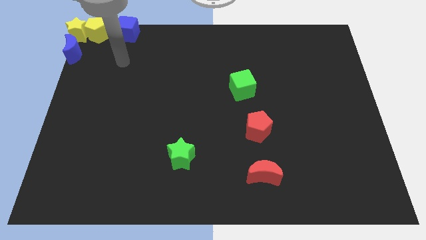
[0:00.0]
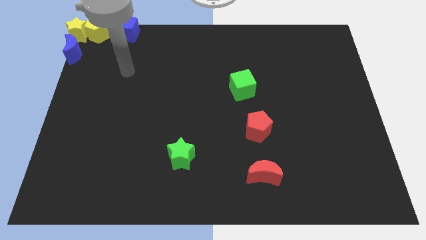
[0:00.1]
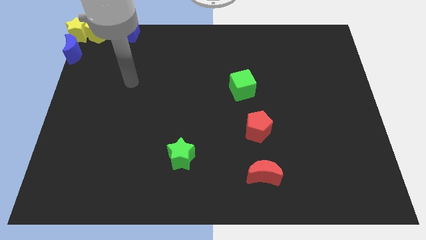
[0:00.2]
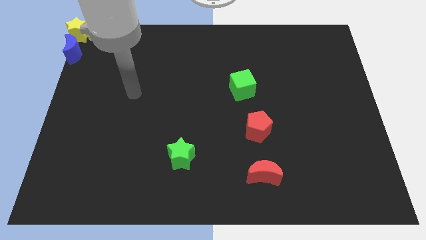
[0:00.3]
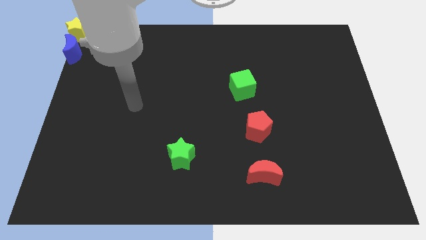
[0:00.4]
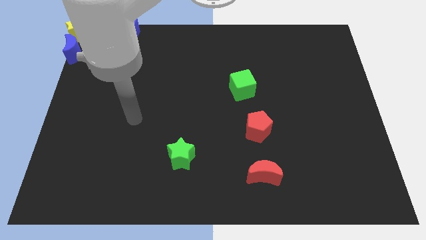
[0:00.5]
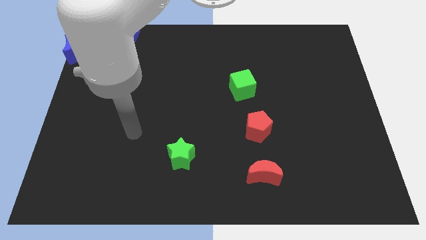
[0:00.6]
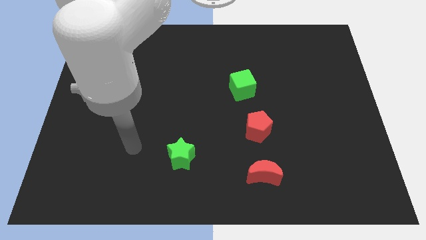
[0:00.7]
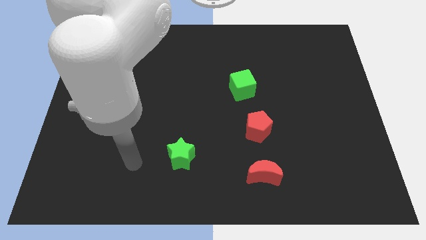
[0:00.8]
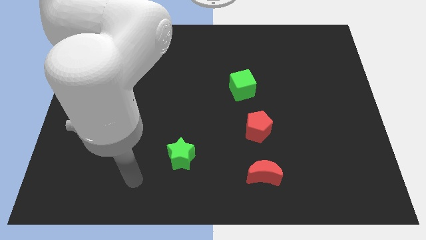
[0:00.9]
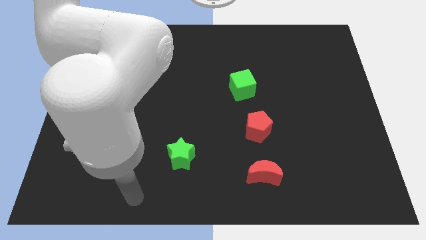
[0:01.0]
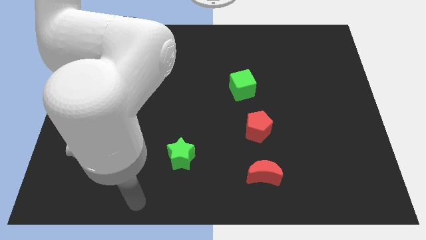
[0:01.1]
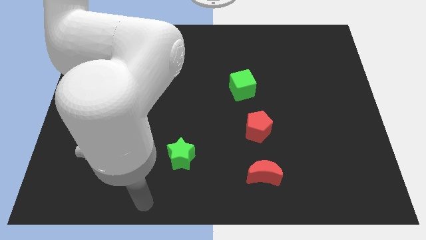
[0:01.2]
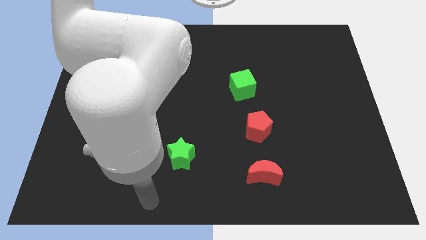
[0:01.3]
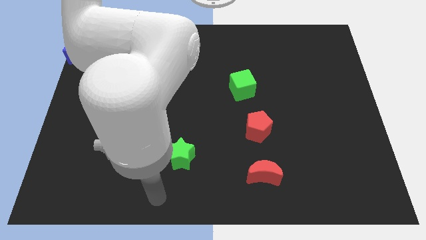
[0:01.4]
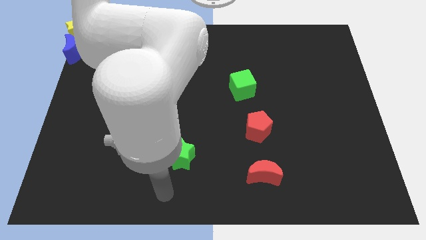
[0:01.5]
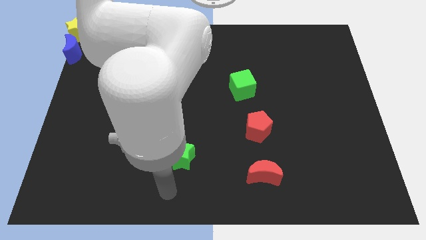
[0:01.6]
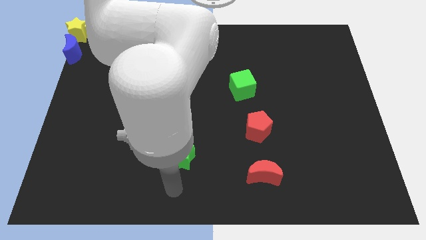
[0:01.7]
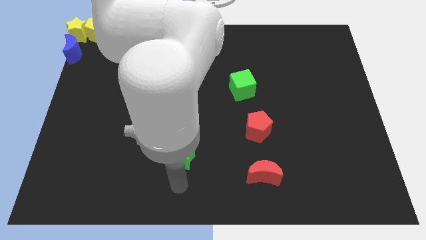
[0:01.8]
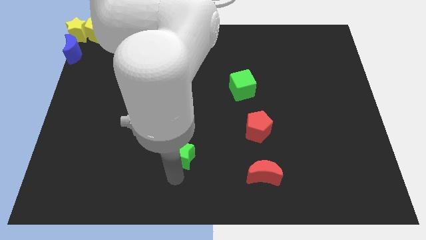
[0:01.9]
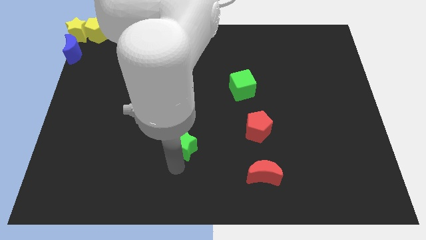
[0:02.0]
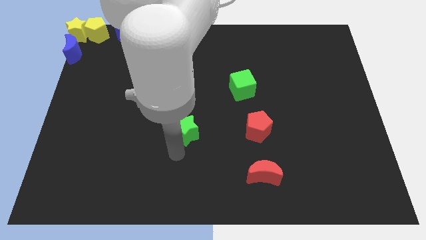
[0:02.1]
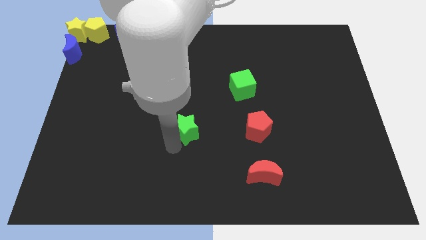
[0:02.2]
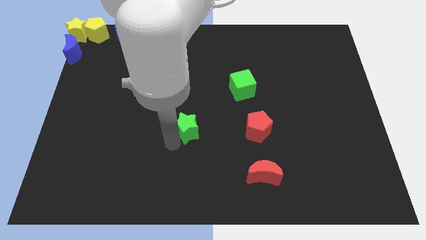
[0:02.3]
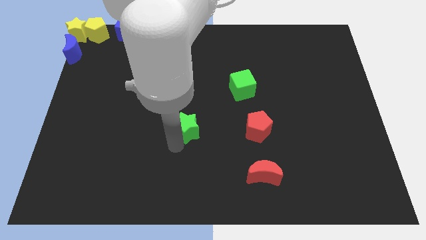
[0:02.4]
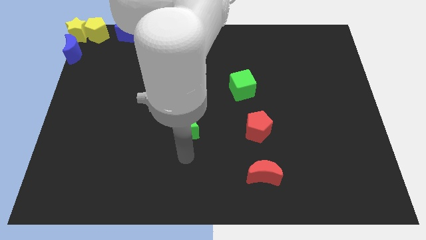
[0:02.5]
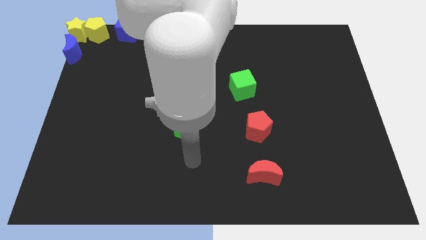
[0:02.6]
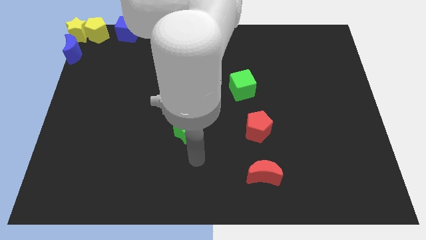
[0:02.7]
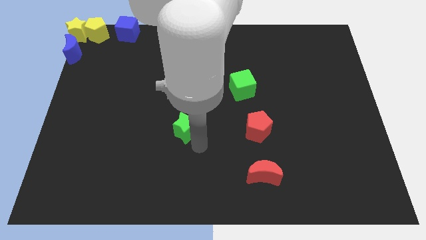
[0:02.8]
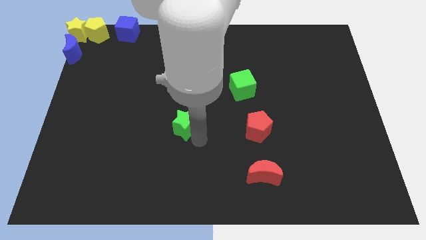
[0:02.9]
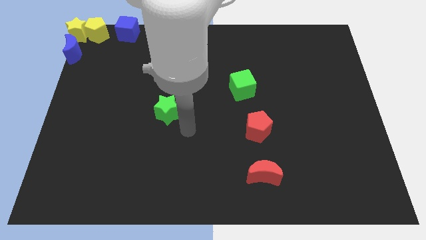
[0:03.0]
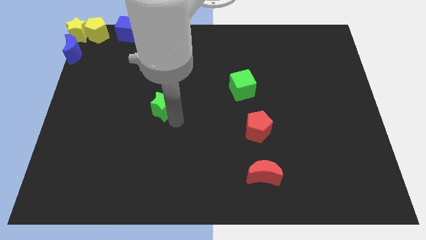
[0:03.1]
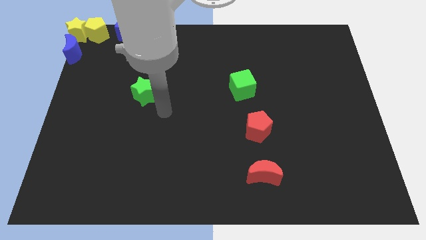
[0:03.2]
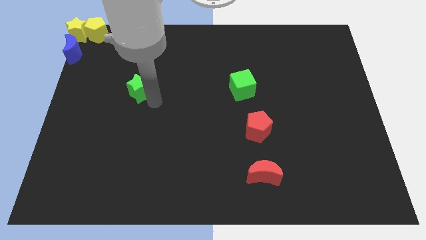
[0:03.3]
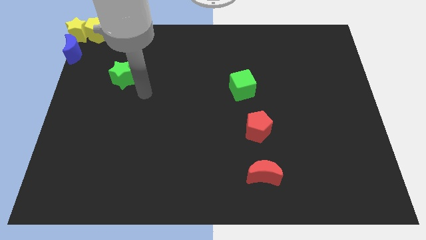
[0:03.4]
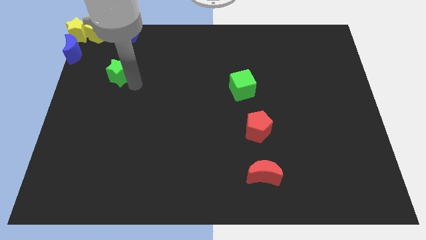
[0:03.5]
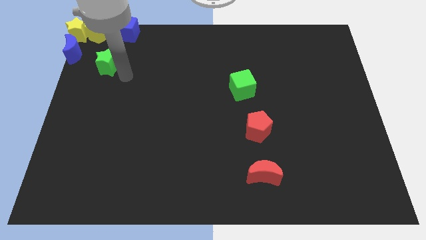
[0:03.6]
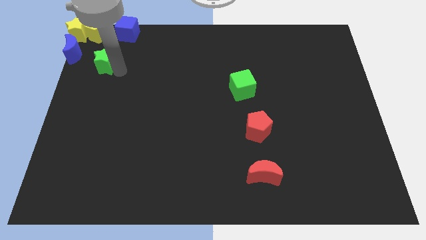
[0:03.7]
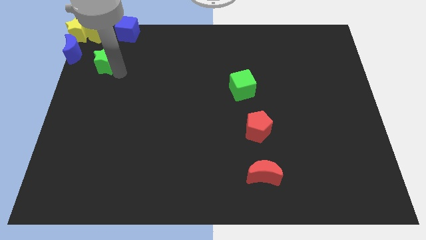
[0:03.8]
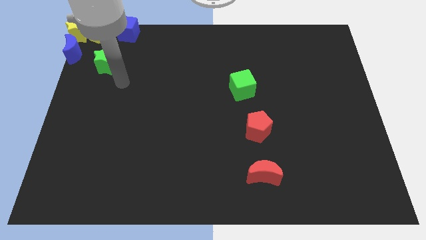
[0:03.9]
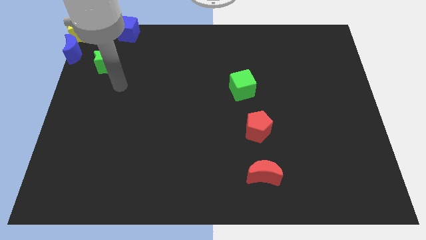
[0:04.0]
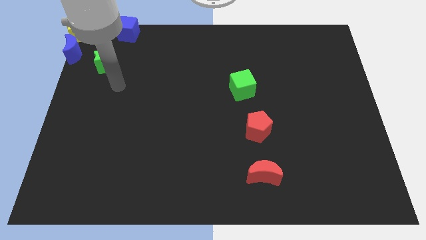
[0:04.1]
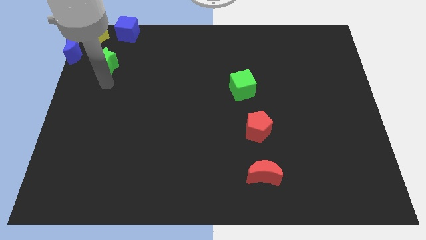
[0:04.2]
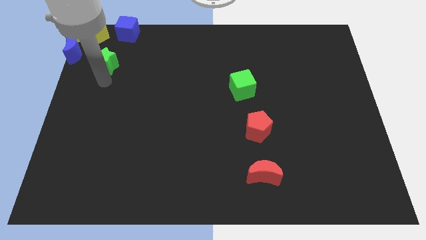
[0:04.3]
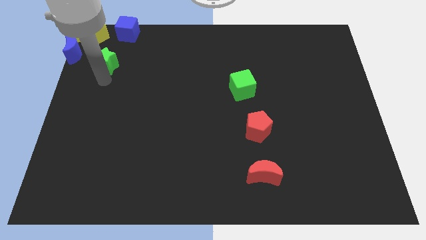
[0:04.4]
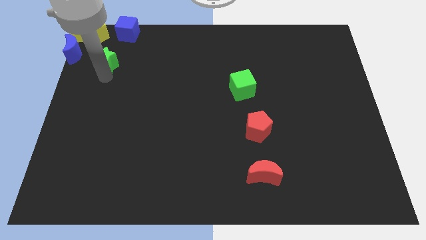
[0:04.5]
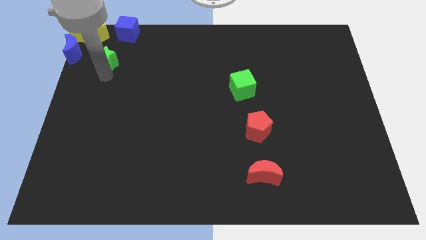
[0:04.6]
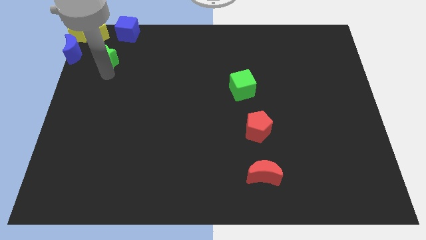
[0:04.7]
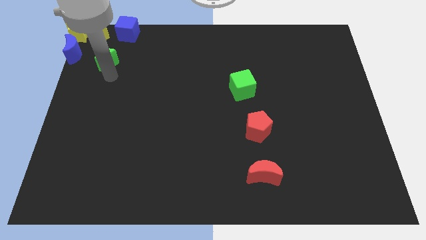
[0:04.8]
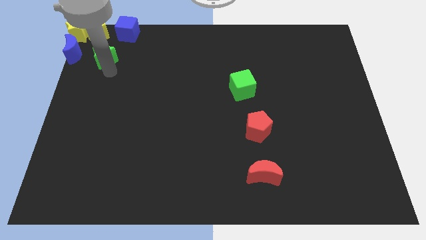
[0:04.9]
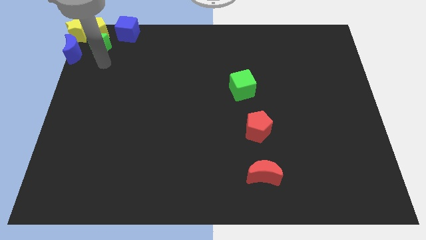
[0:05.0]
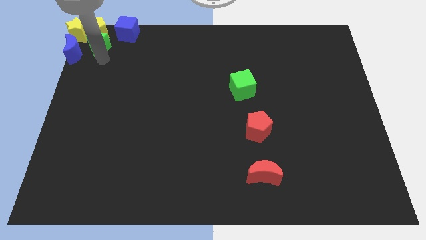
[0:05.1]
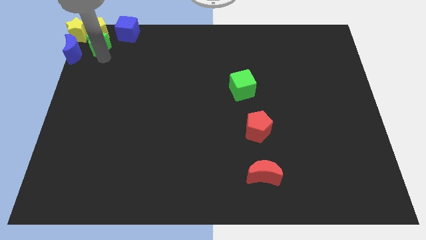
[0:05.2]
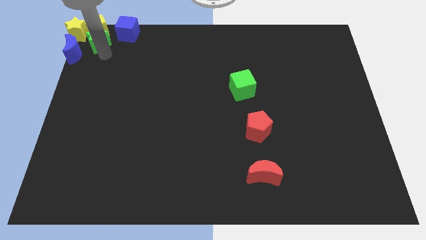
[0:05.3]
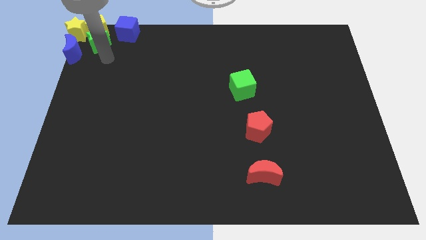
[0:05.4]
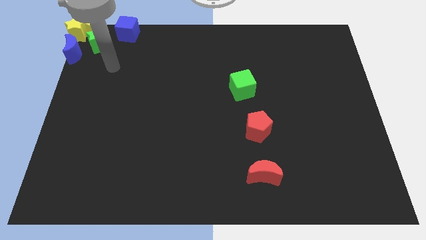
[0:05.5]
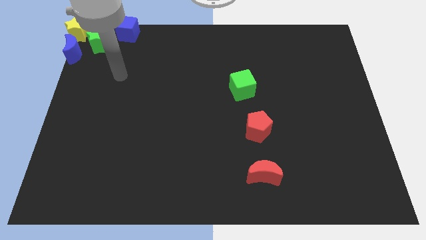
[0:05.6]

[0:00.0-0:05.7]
place the green star at the bottom of the yellow pentagon

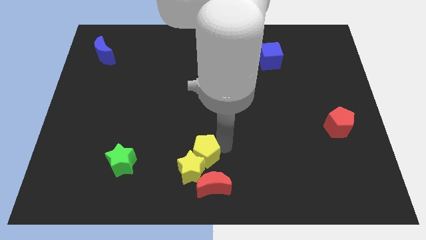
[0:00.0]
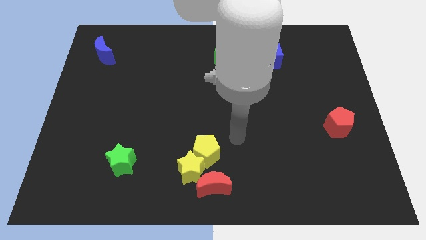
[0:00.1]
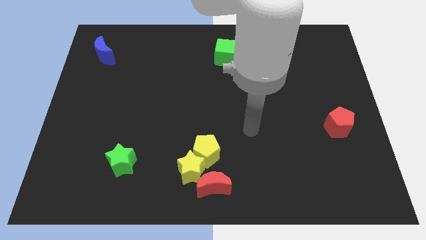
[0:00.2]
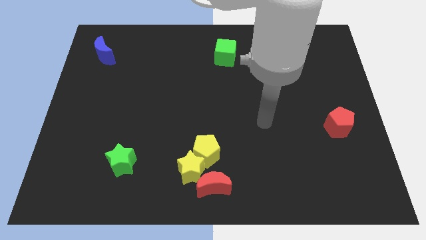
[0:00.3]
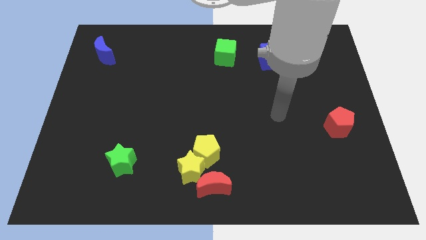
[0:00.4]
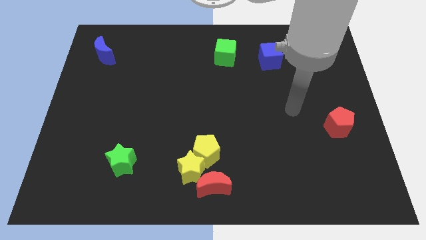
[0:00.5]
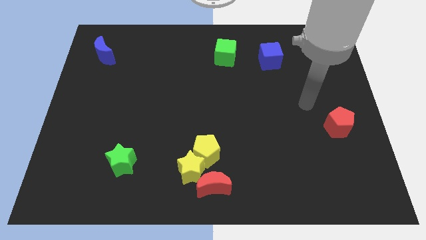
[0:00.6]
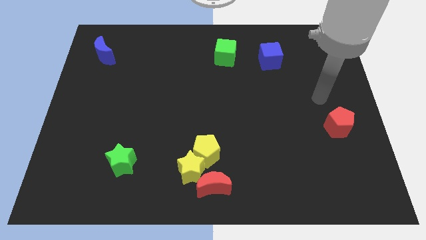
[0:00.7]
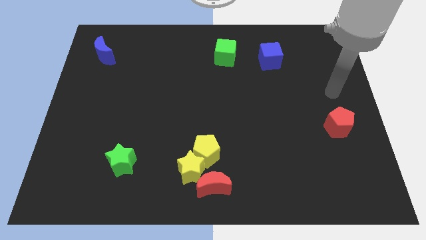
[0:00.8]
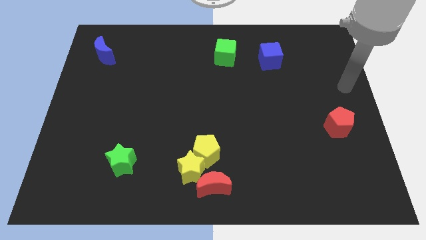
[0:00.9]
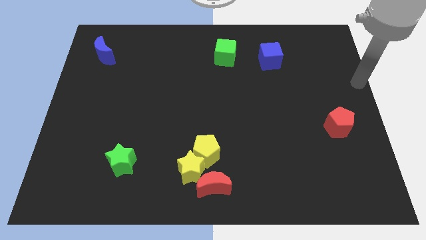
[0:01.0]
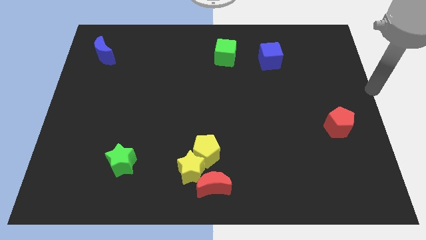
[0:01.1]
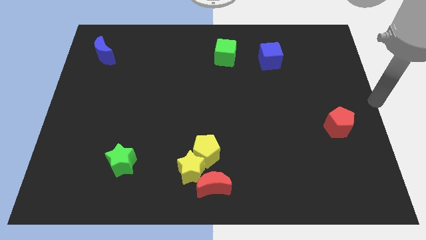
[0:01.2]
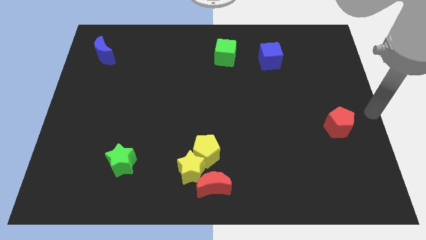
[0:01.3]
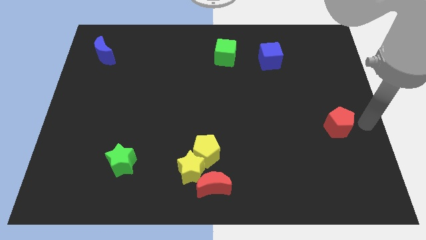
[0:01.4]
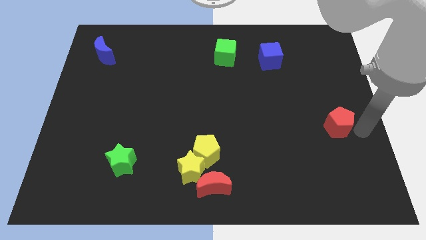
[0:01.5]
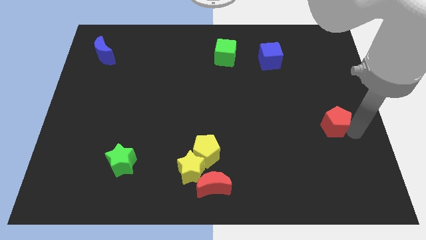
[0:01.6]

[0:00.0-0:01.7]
move your arm towards red pentagon

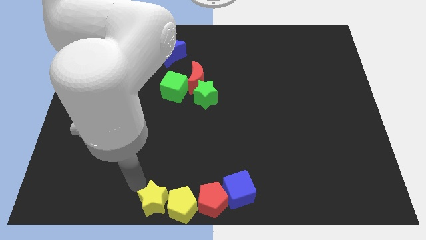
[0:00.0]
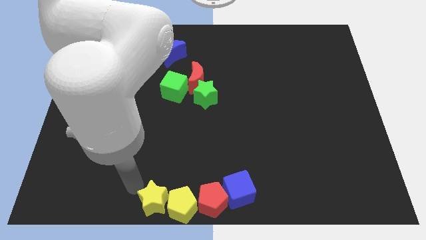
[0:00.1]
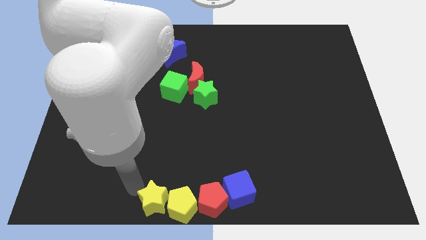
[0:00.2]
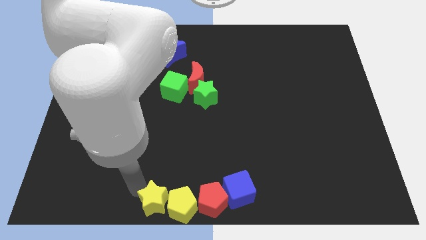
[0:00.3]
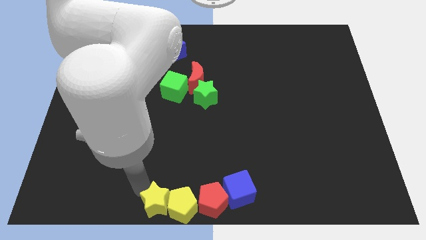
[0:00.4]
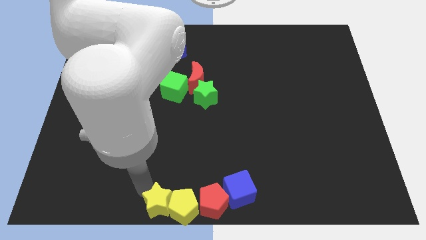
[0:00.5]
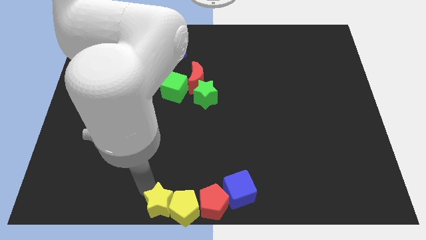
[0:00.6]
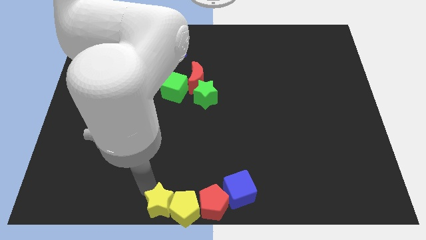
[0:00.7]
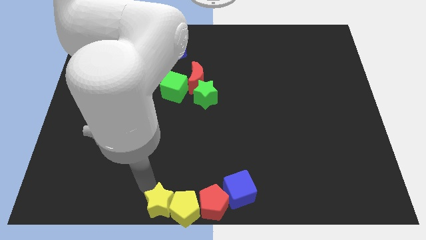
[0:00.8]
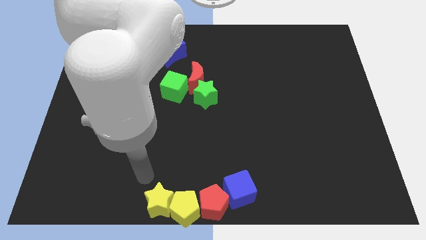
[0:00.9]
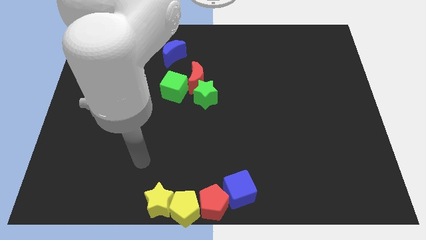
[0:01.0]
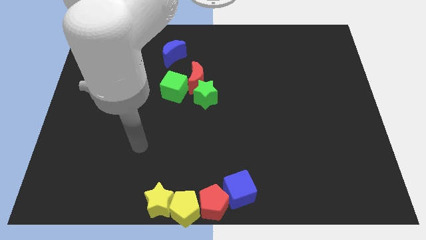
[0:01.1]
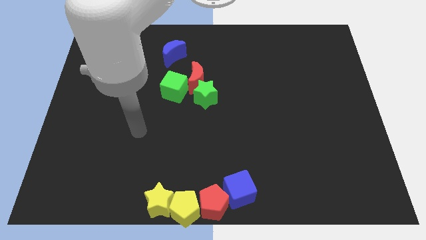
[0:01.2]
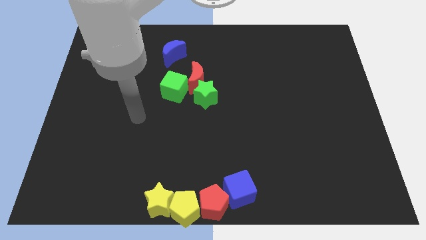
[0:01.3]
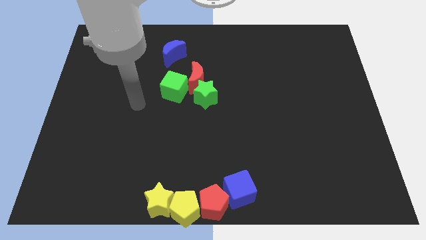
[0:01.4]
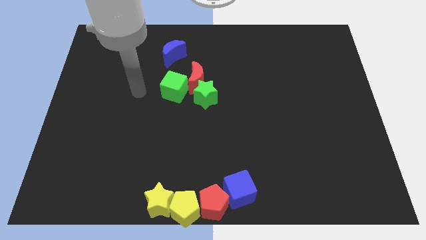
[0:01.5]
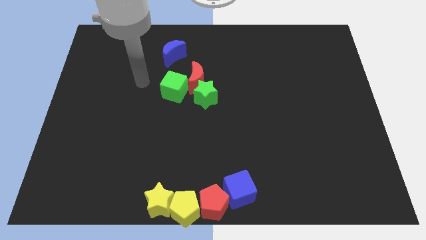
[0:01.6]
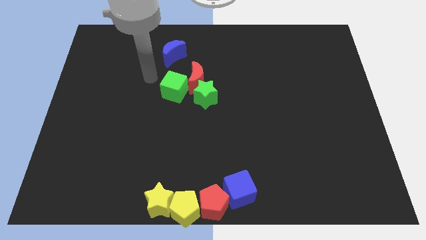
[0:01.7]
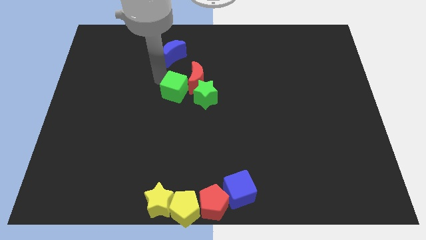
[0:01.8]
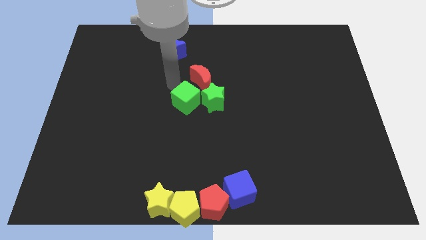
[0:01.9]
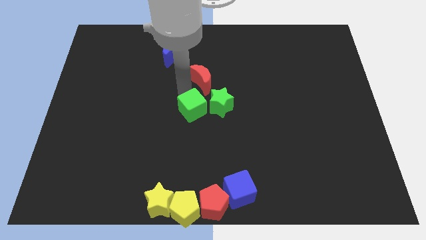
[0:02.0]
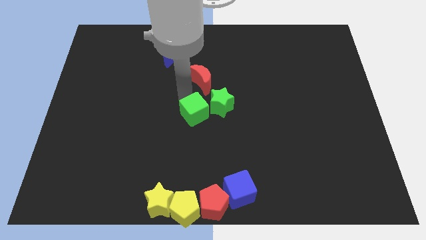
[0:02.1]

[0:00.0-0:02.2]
place the arm above the green cube at the top center
